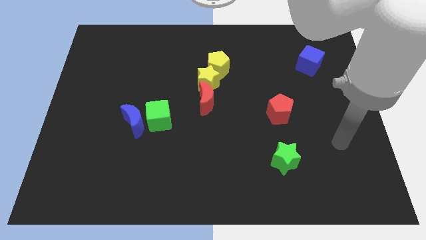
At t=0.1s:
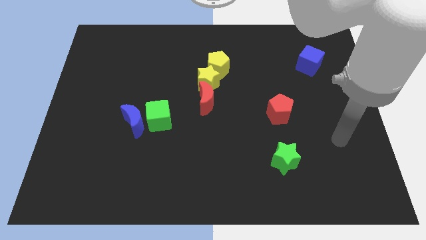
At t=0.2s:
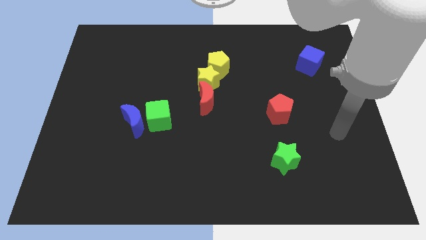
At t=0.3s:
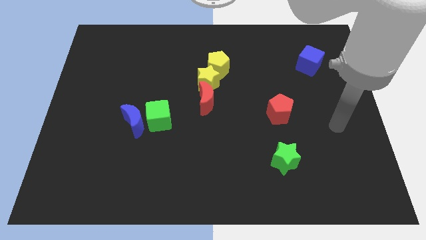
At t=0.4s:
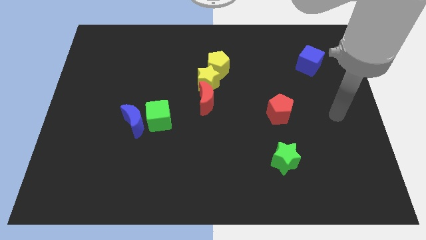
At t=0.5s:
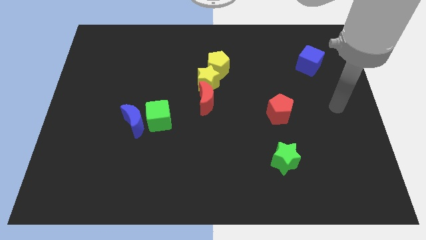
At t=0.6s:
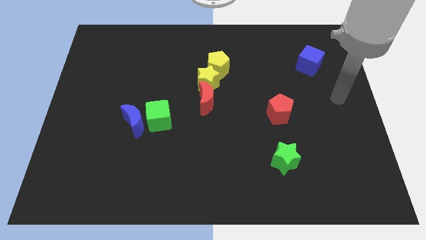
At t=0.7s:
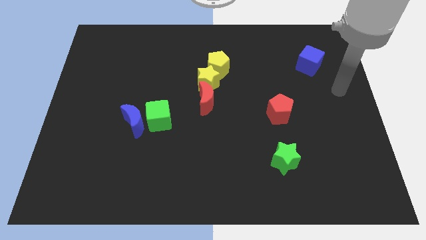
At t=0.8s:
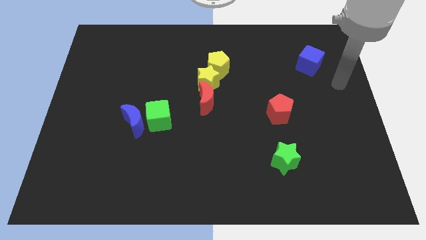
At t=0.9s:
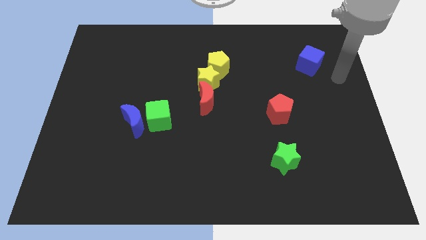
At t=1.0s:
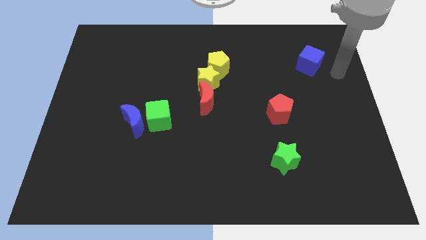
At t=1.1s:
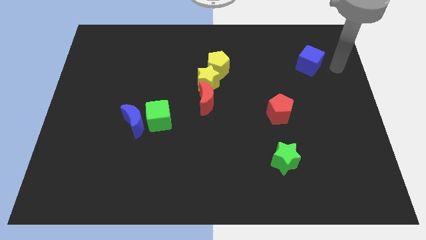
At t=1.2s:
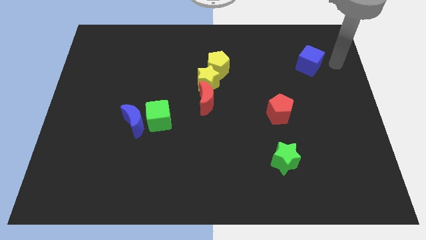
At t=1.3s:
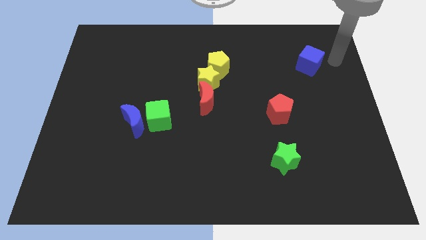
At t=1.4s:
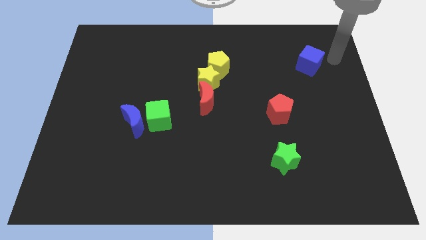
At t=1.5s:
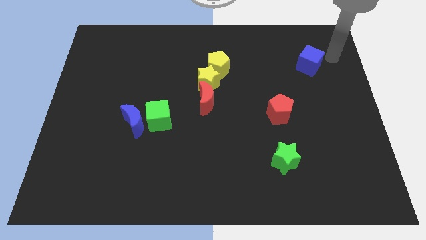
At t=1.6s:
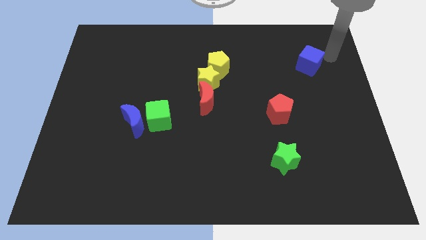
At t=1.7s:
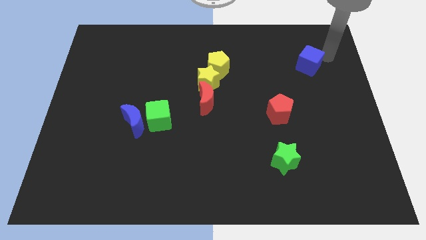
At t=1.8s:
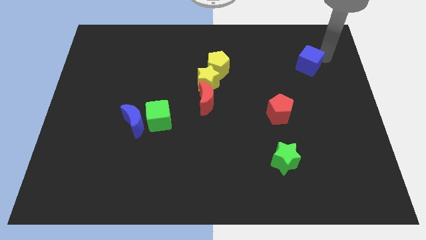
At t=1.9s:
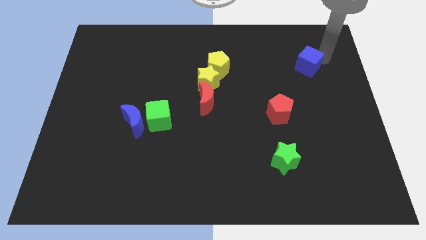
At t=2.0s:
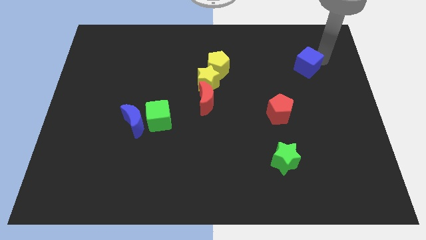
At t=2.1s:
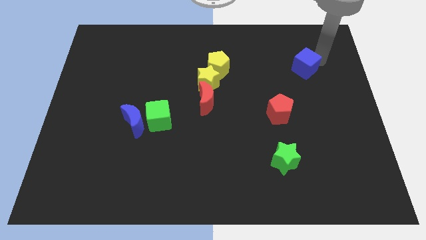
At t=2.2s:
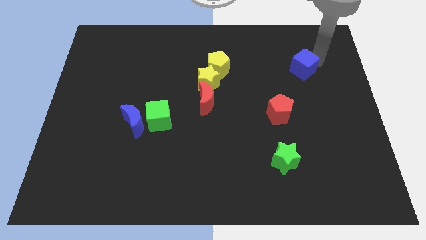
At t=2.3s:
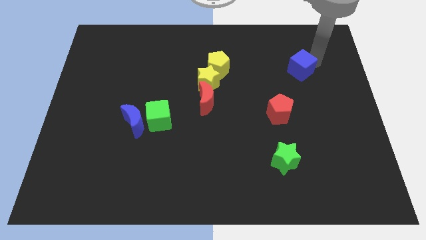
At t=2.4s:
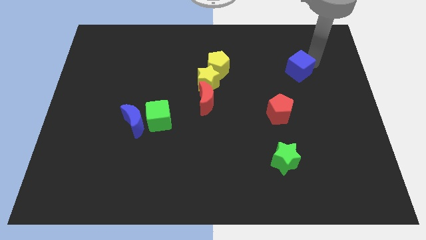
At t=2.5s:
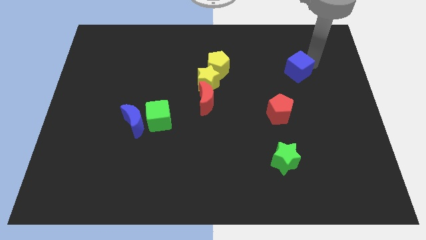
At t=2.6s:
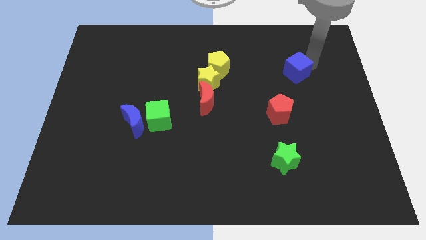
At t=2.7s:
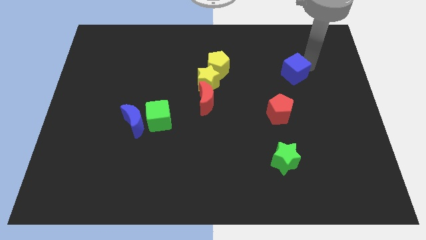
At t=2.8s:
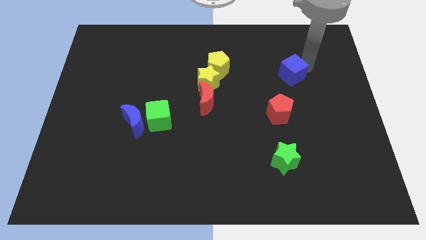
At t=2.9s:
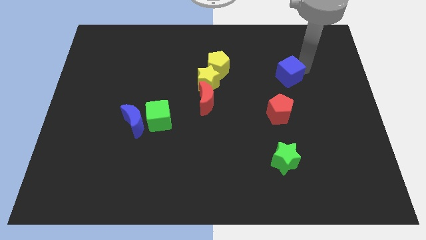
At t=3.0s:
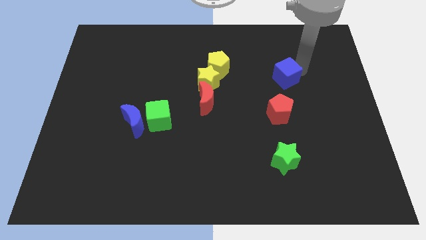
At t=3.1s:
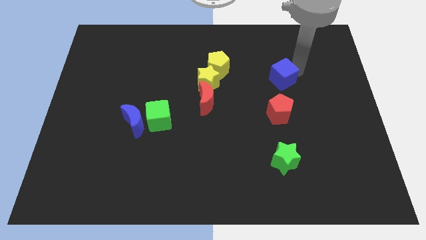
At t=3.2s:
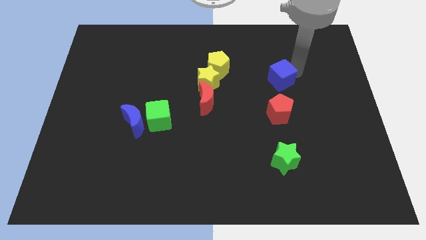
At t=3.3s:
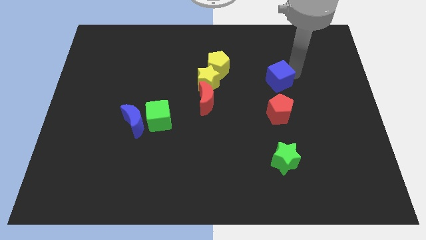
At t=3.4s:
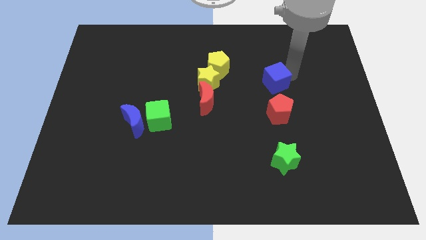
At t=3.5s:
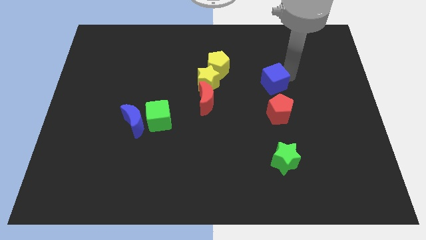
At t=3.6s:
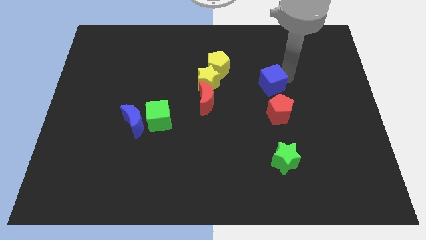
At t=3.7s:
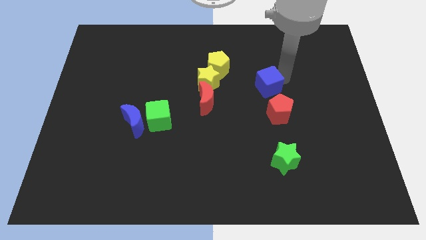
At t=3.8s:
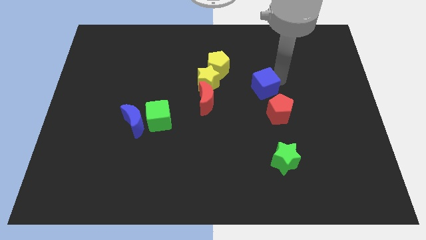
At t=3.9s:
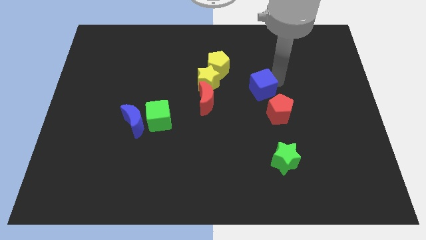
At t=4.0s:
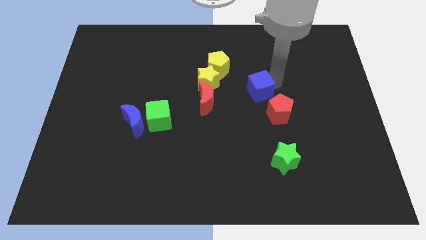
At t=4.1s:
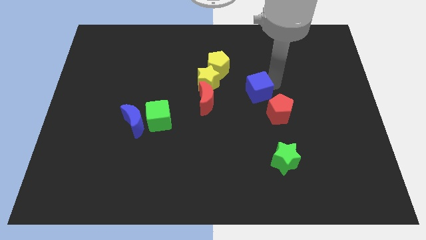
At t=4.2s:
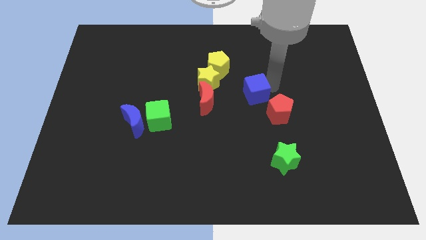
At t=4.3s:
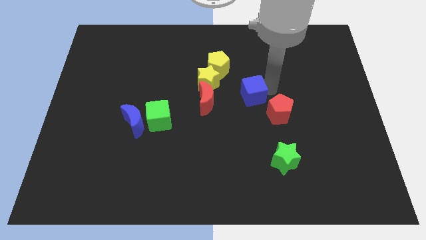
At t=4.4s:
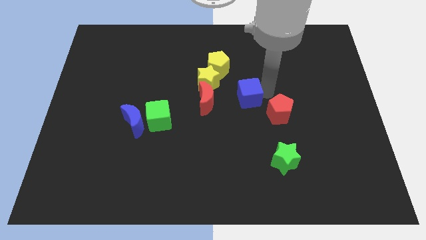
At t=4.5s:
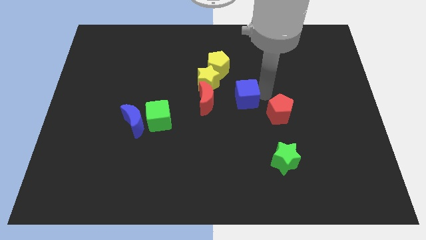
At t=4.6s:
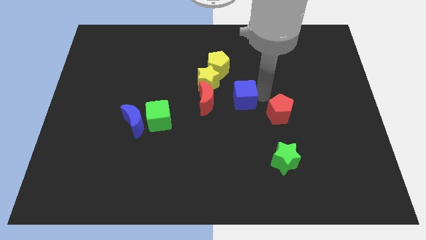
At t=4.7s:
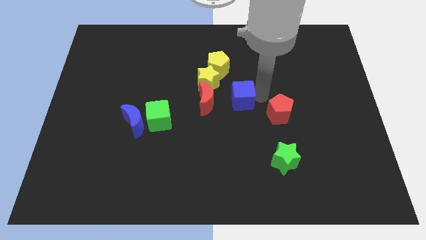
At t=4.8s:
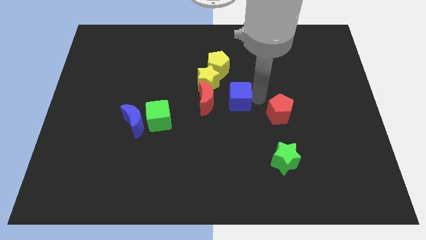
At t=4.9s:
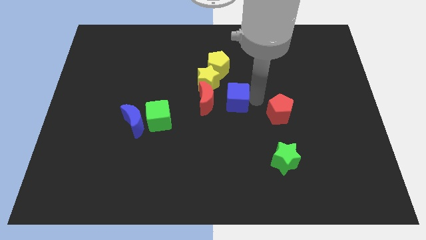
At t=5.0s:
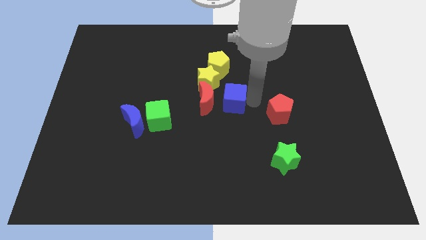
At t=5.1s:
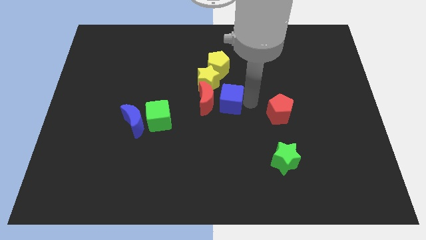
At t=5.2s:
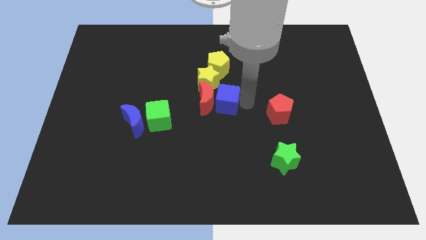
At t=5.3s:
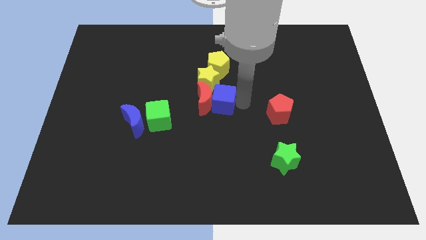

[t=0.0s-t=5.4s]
slide the blue cube close to the red moon

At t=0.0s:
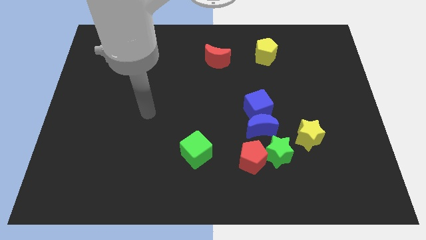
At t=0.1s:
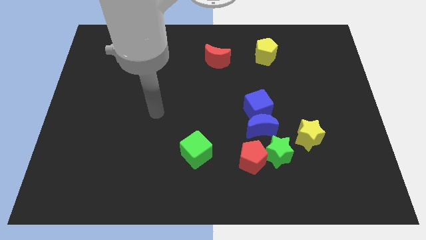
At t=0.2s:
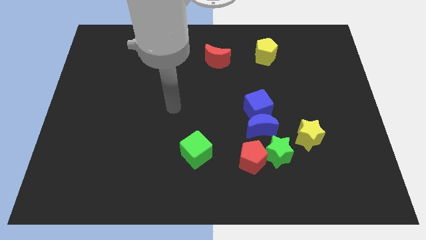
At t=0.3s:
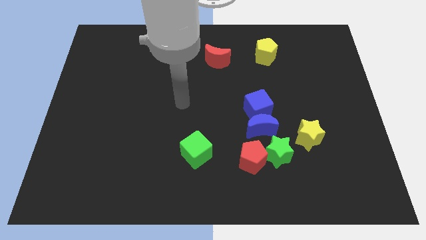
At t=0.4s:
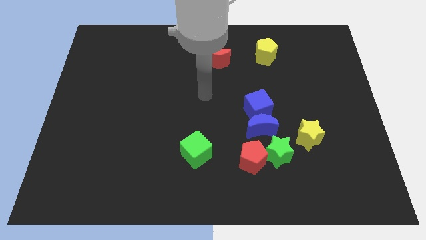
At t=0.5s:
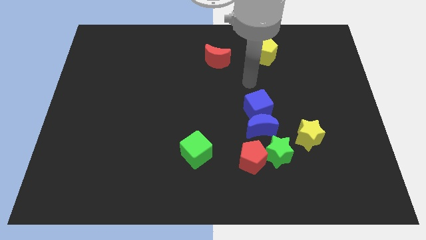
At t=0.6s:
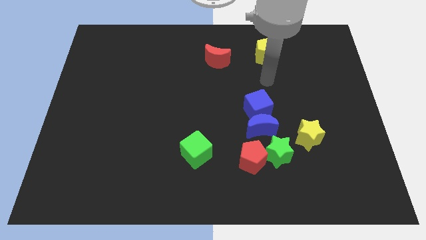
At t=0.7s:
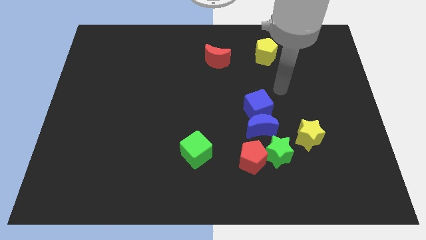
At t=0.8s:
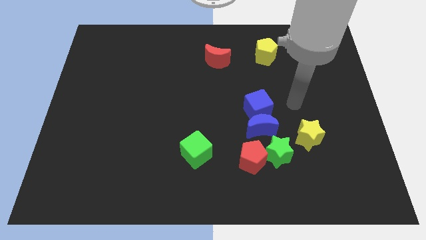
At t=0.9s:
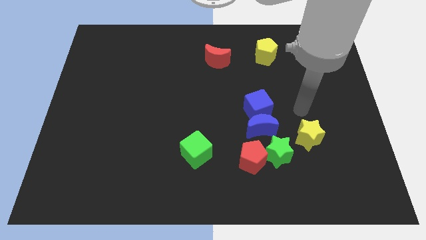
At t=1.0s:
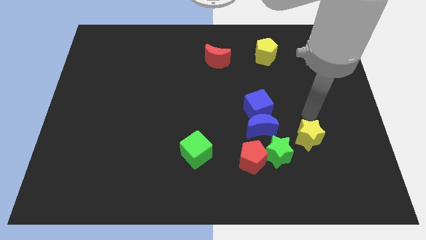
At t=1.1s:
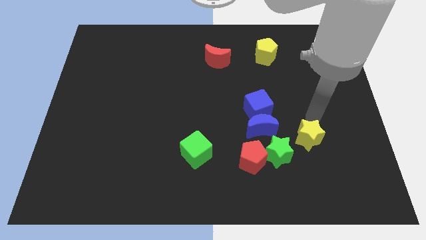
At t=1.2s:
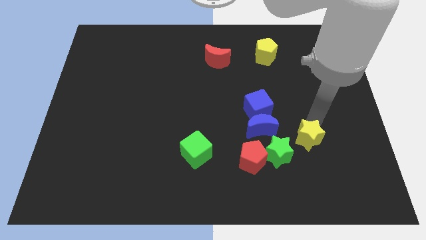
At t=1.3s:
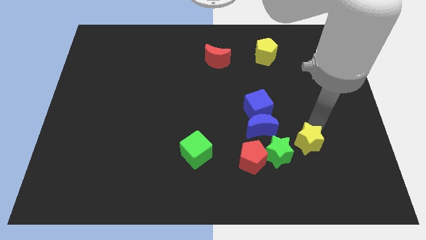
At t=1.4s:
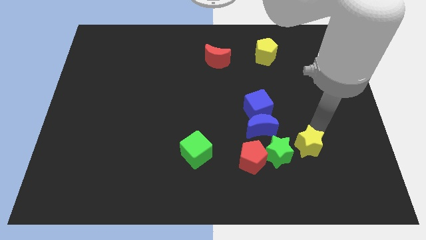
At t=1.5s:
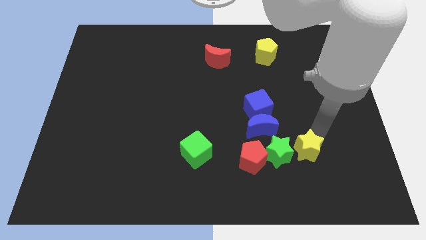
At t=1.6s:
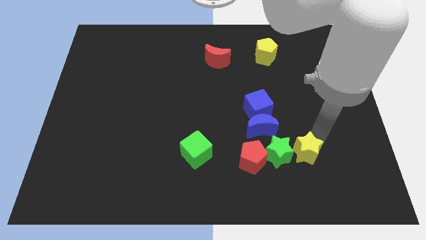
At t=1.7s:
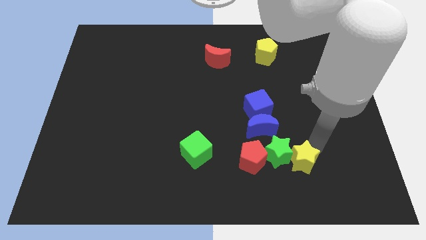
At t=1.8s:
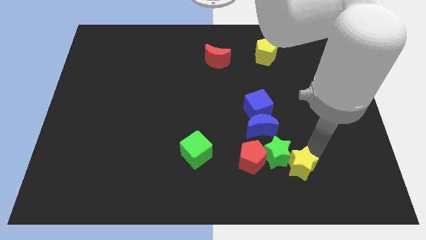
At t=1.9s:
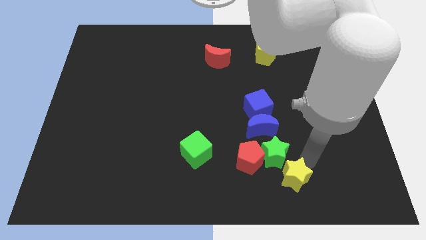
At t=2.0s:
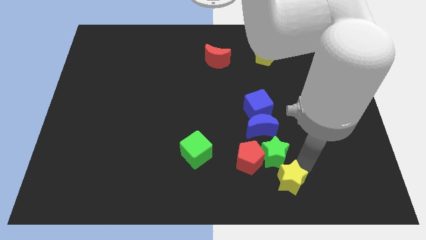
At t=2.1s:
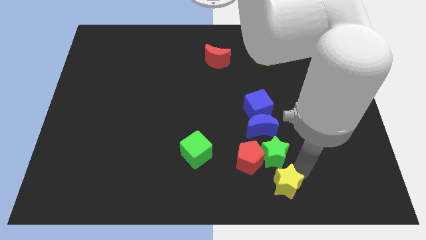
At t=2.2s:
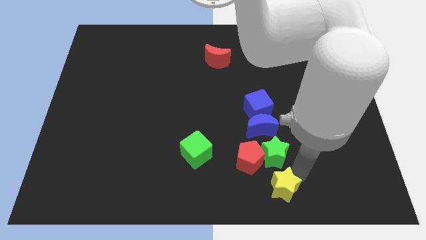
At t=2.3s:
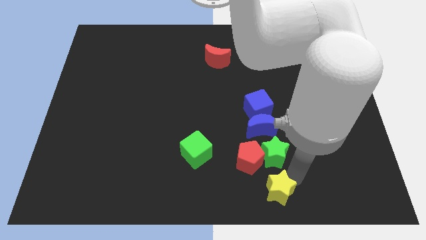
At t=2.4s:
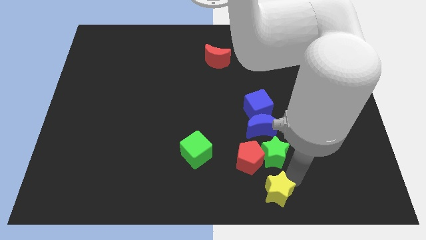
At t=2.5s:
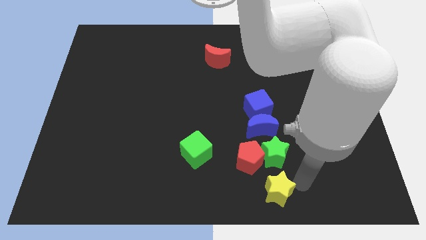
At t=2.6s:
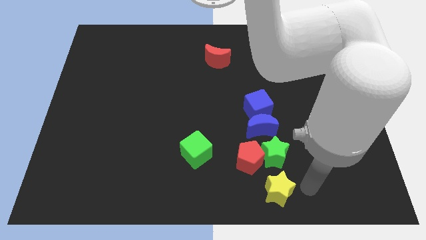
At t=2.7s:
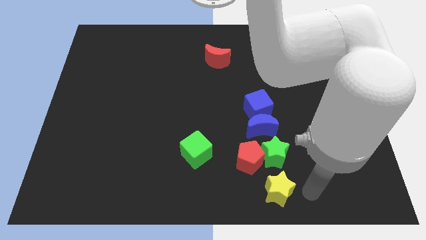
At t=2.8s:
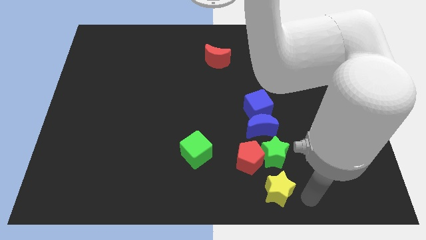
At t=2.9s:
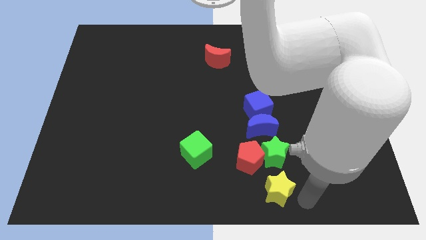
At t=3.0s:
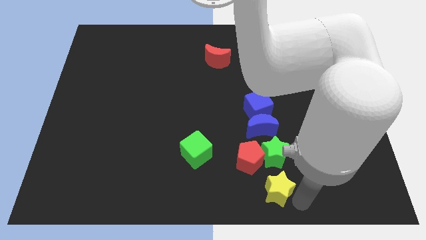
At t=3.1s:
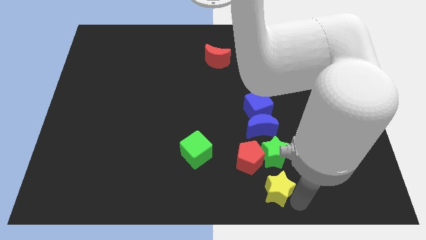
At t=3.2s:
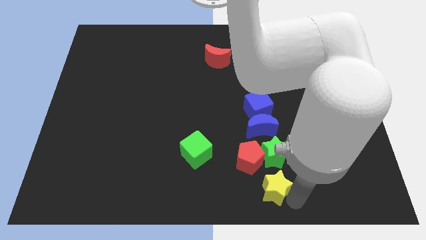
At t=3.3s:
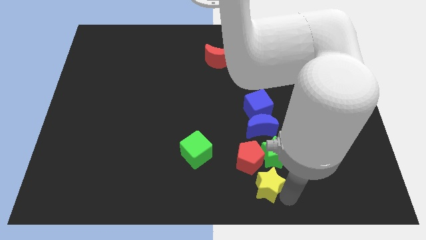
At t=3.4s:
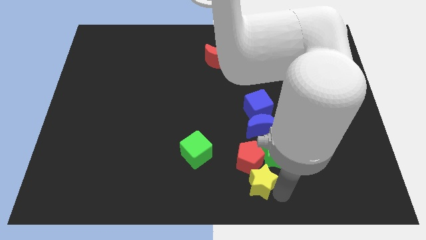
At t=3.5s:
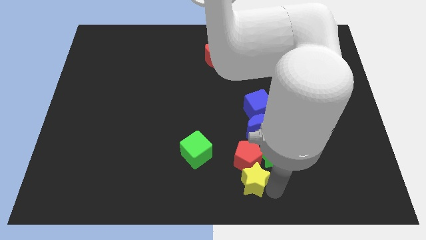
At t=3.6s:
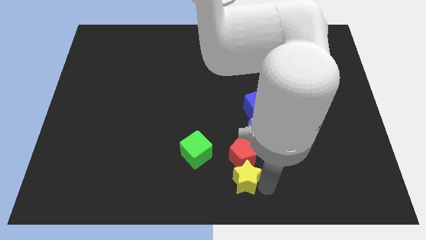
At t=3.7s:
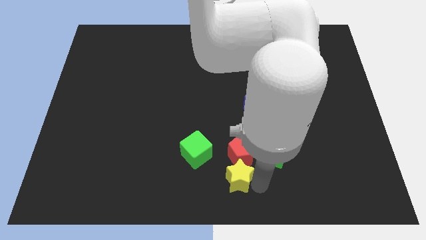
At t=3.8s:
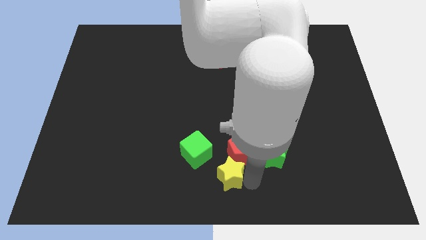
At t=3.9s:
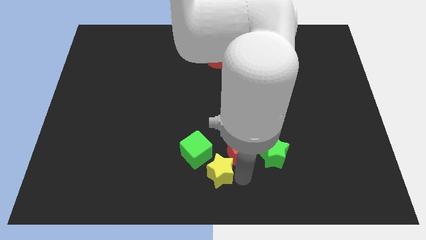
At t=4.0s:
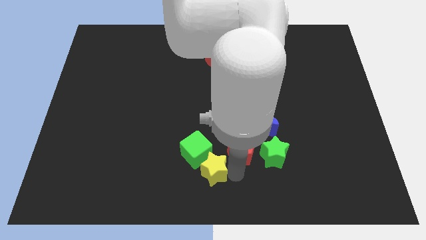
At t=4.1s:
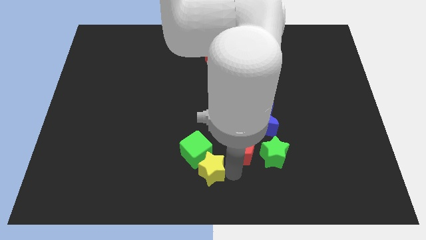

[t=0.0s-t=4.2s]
push the yellow star close to the green cube
